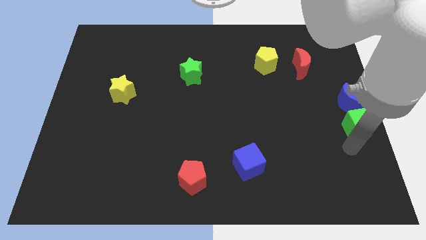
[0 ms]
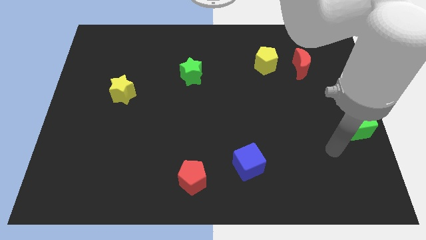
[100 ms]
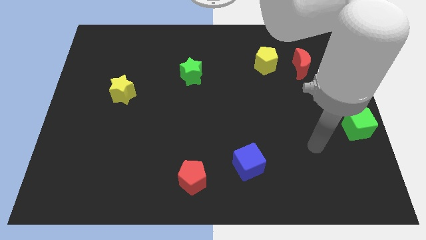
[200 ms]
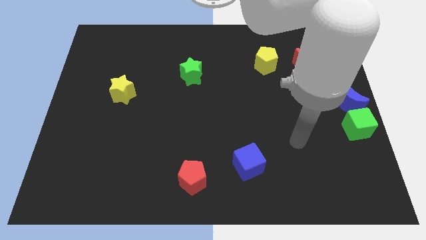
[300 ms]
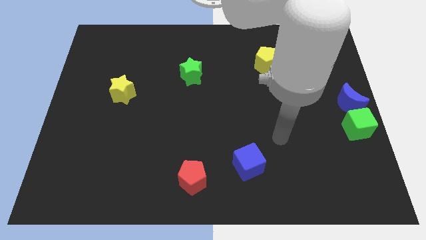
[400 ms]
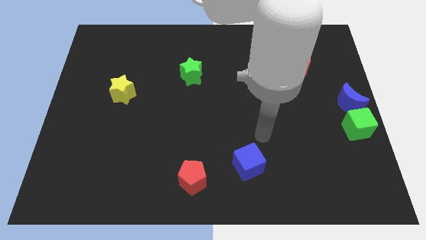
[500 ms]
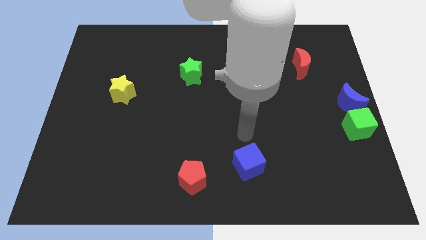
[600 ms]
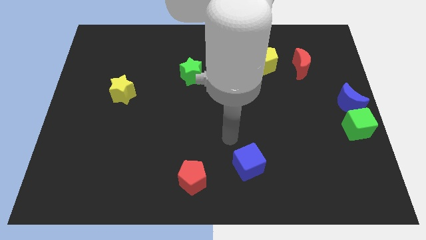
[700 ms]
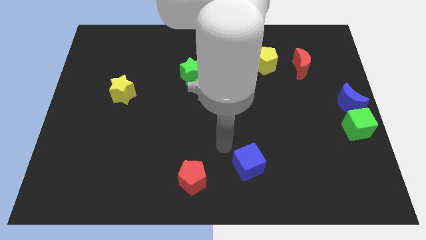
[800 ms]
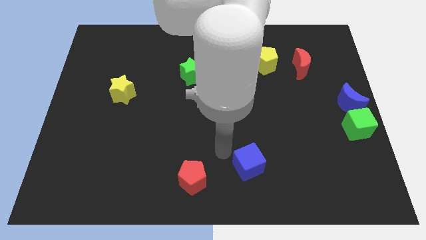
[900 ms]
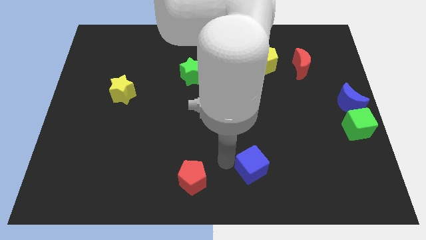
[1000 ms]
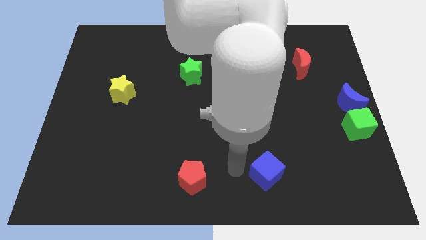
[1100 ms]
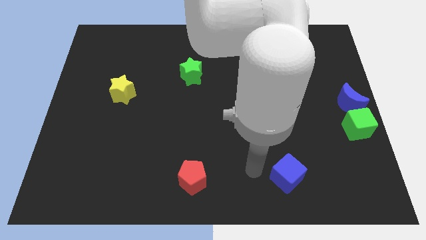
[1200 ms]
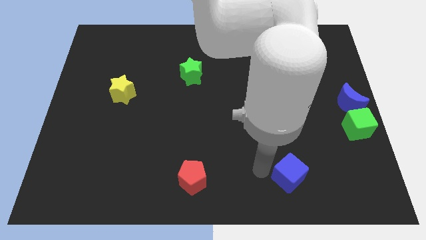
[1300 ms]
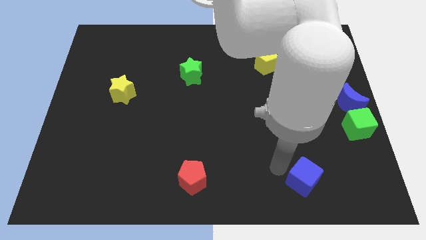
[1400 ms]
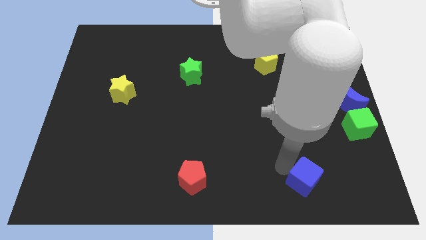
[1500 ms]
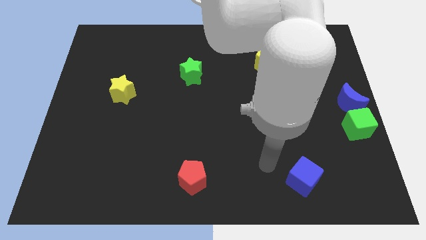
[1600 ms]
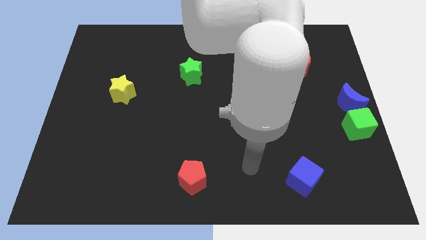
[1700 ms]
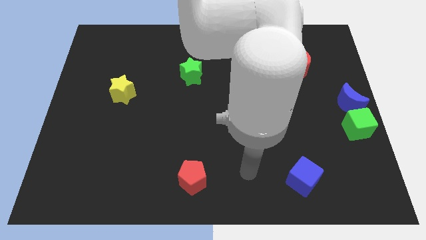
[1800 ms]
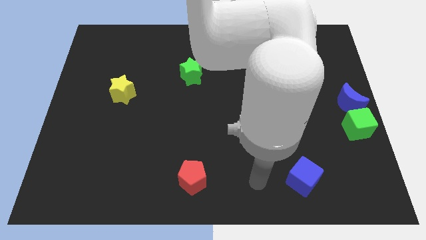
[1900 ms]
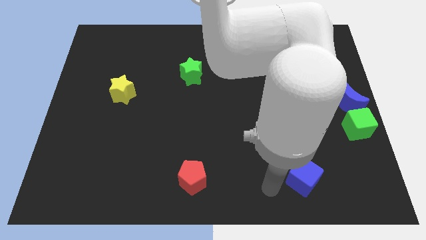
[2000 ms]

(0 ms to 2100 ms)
push blue cube to the right of red pentagon

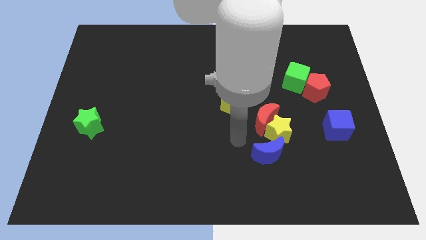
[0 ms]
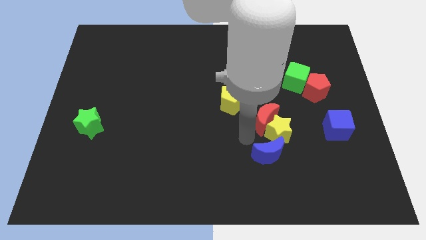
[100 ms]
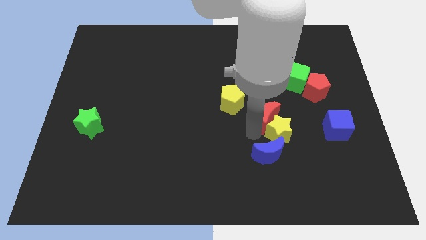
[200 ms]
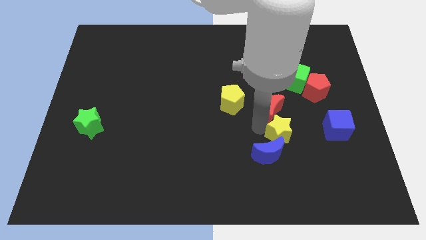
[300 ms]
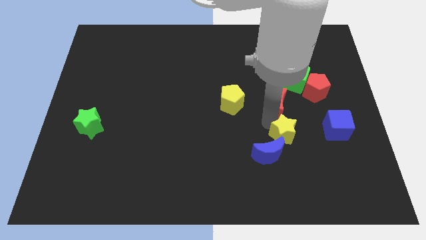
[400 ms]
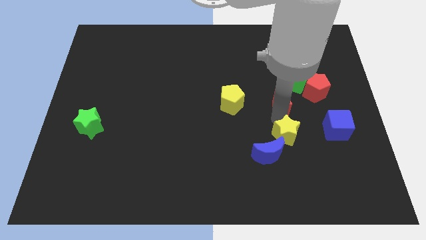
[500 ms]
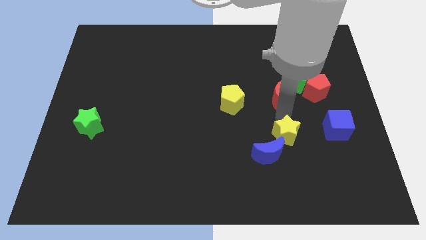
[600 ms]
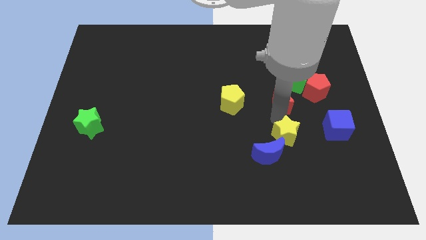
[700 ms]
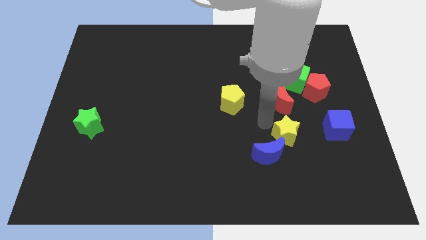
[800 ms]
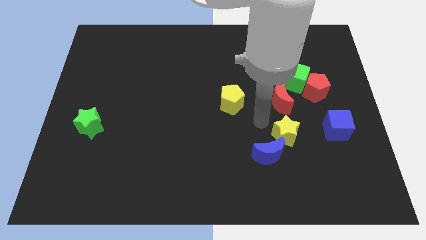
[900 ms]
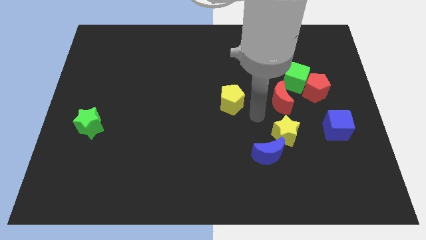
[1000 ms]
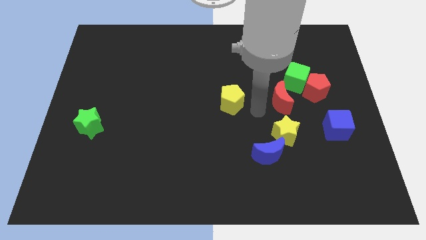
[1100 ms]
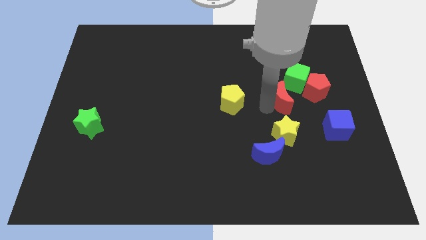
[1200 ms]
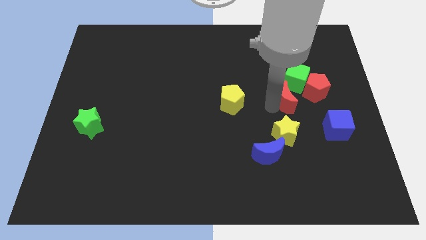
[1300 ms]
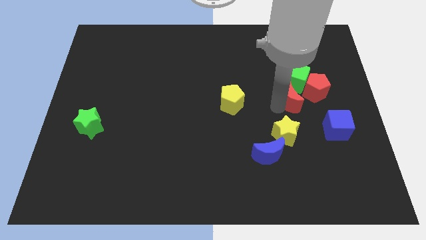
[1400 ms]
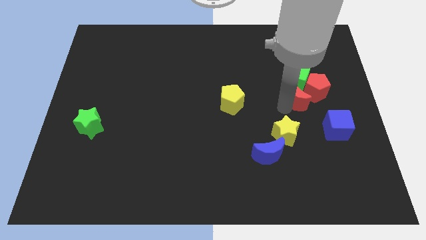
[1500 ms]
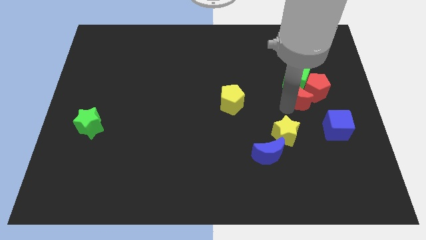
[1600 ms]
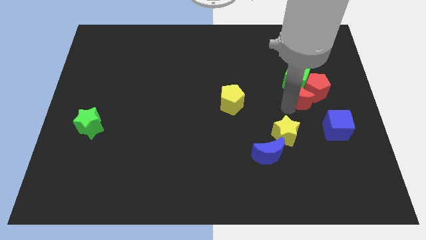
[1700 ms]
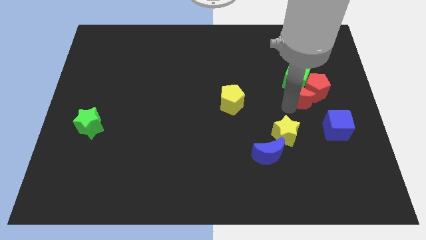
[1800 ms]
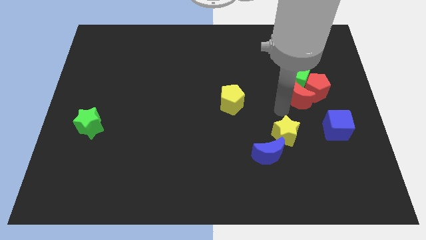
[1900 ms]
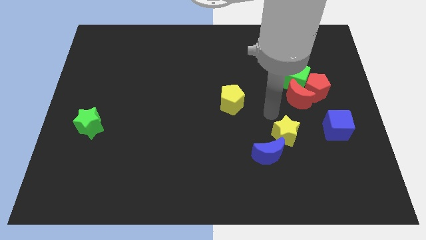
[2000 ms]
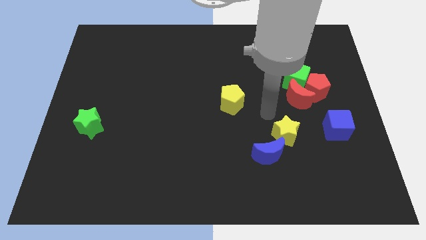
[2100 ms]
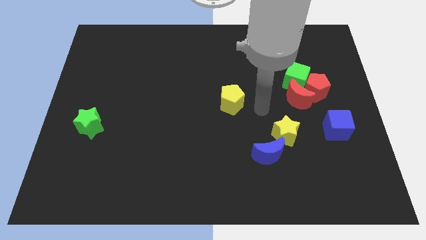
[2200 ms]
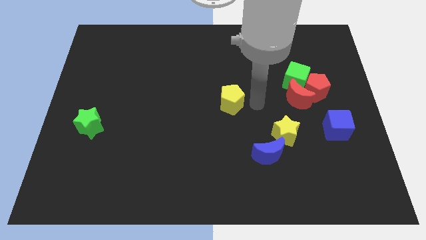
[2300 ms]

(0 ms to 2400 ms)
move red crescent to the left top of the blue cube

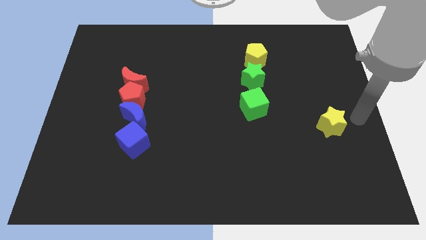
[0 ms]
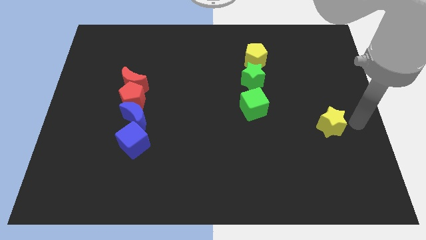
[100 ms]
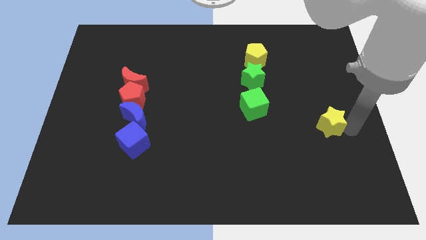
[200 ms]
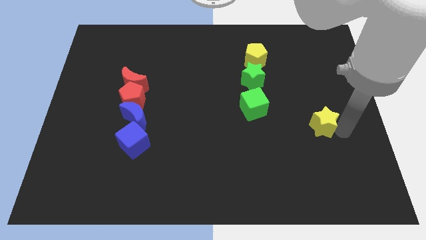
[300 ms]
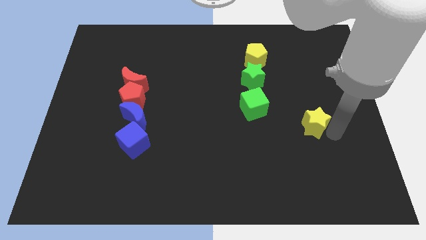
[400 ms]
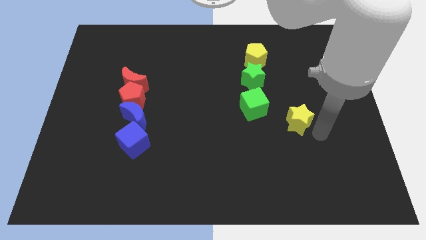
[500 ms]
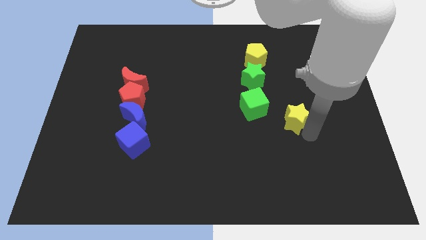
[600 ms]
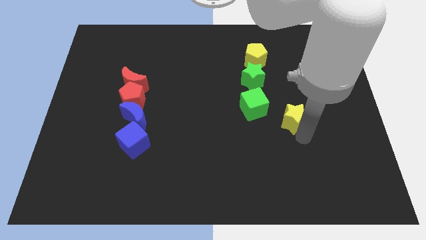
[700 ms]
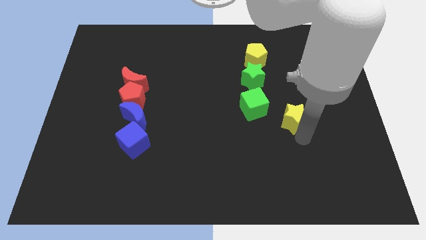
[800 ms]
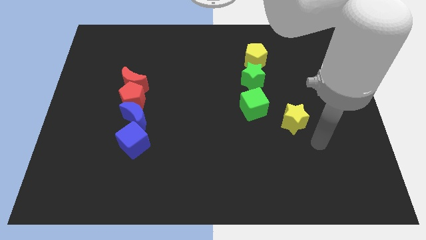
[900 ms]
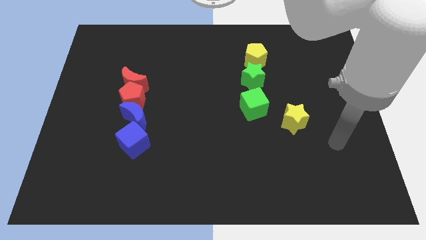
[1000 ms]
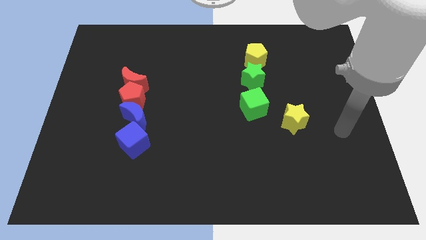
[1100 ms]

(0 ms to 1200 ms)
push the yellow star towards the line of blocks

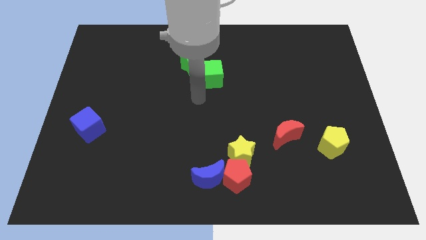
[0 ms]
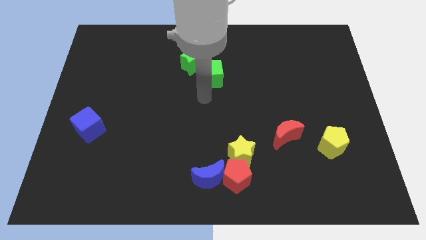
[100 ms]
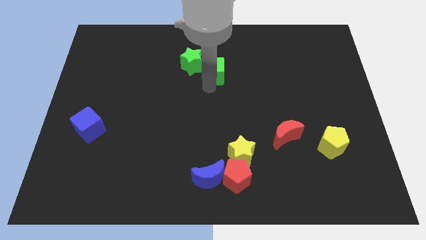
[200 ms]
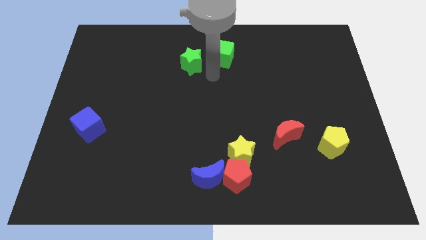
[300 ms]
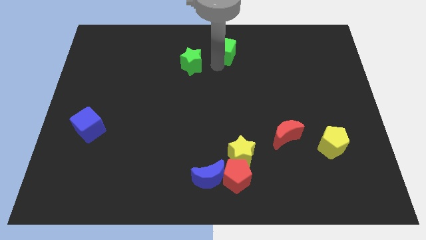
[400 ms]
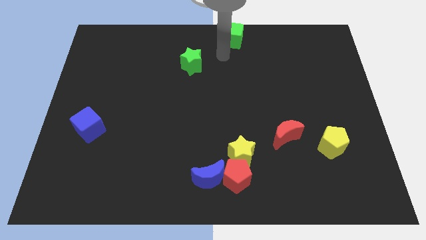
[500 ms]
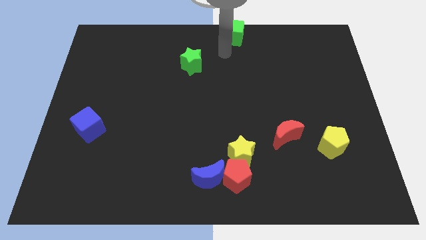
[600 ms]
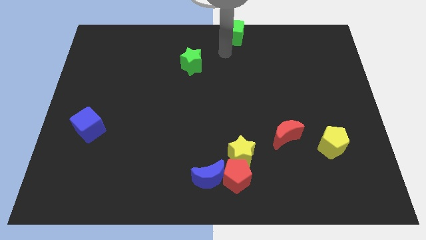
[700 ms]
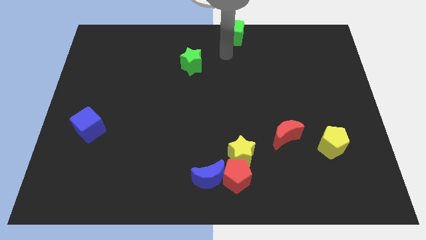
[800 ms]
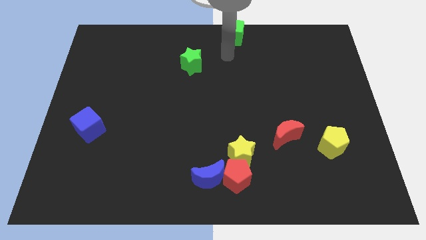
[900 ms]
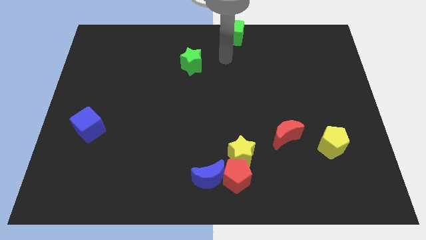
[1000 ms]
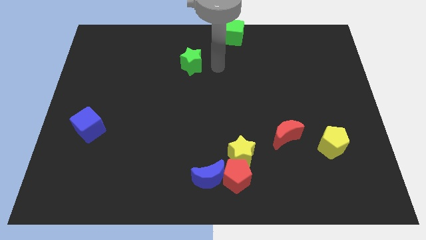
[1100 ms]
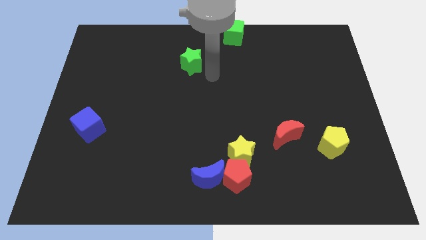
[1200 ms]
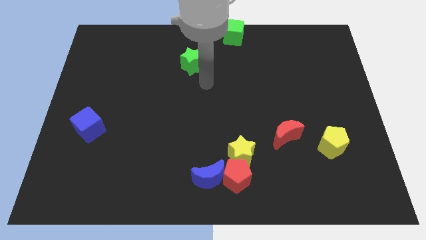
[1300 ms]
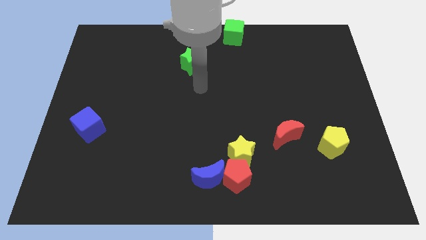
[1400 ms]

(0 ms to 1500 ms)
move the green cube to the top center of the board

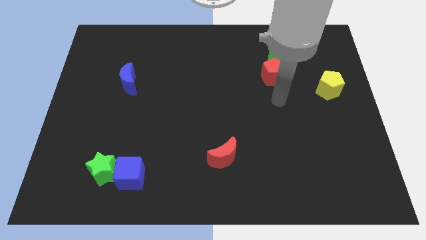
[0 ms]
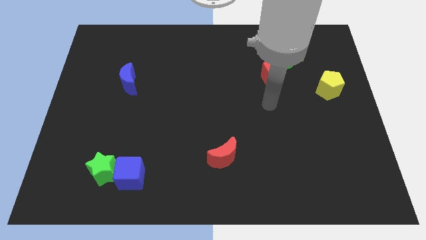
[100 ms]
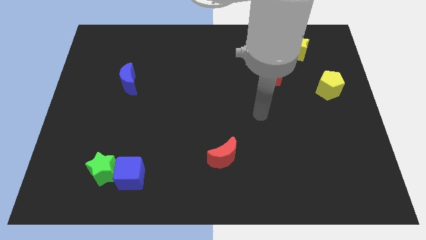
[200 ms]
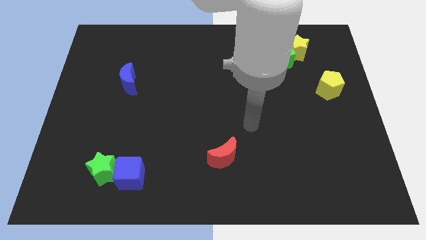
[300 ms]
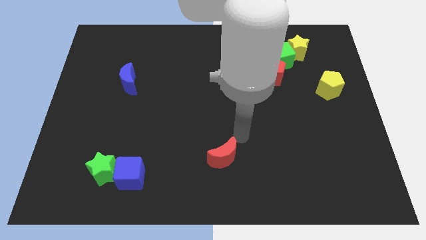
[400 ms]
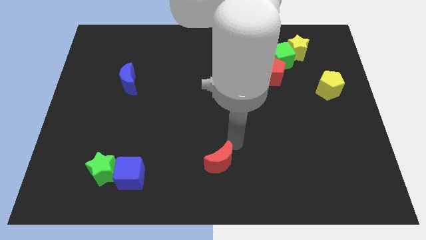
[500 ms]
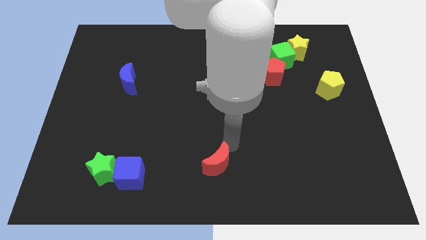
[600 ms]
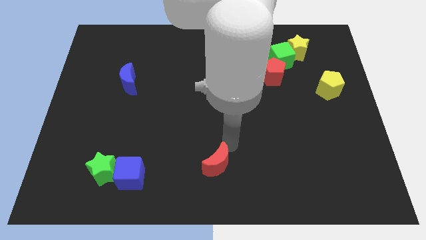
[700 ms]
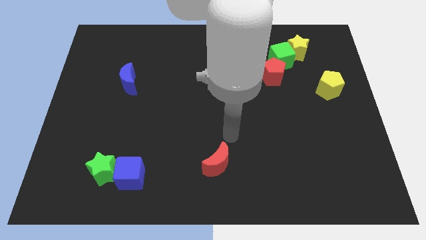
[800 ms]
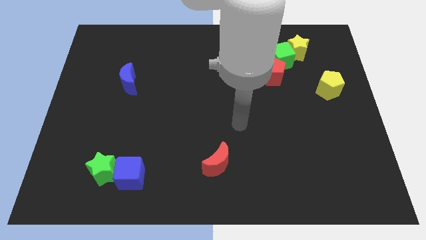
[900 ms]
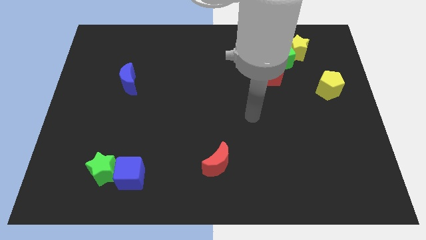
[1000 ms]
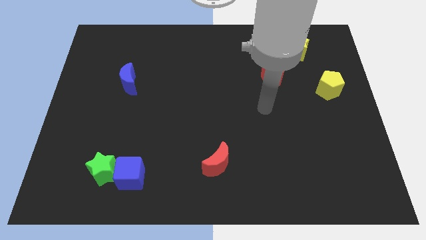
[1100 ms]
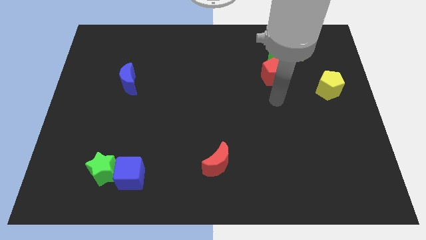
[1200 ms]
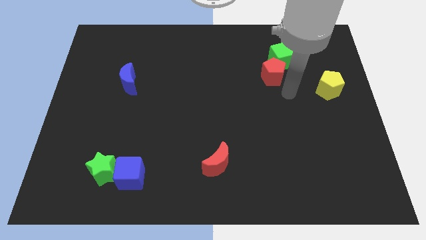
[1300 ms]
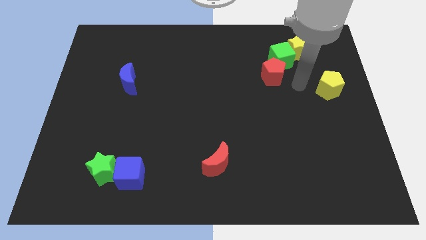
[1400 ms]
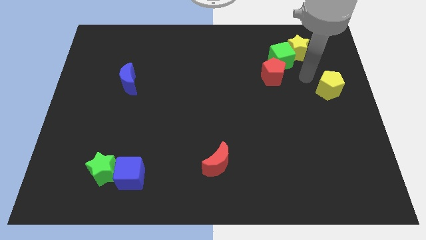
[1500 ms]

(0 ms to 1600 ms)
move your arm in between the green cube and yellow pentagon

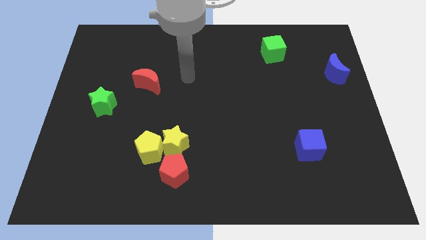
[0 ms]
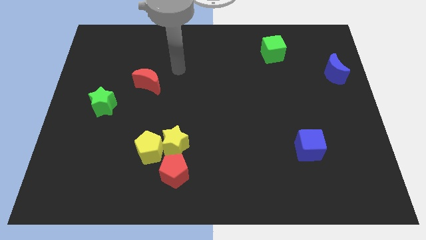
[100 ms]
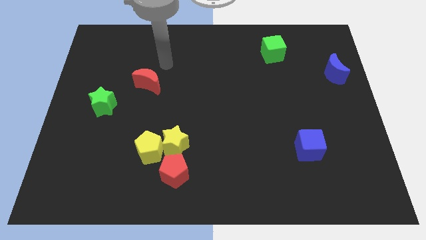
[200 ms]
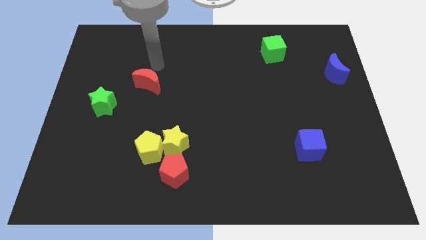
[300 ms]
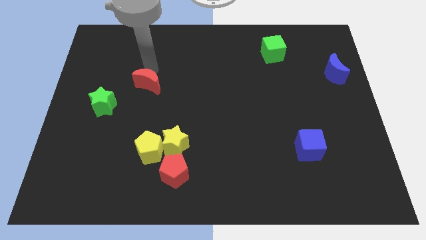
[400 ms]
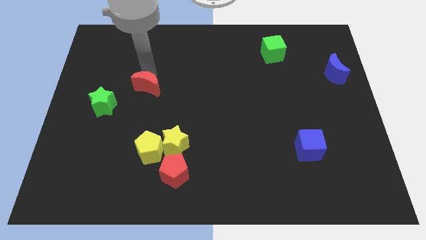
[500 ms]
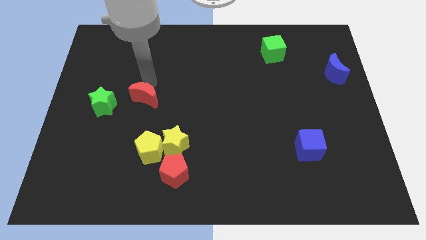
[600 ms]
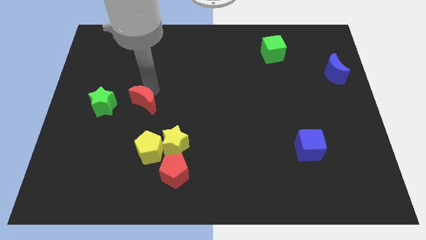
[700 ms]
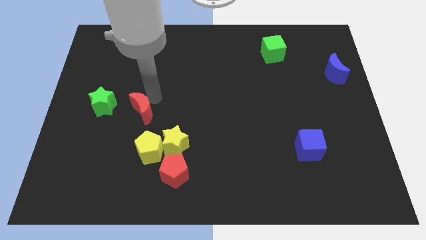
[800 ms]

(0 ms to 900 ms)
push red crescent
